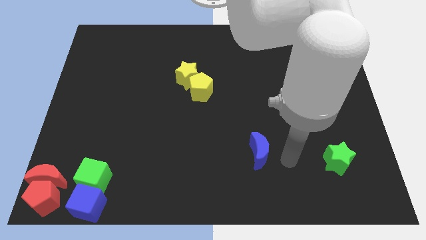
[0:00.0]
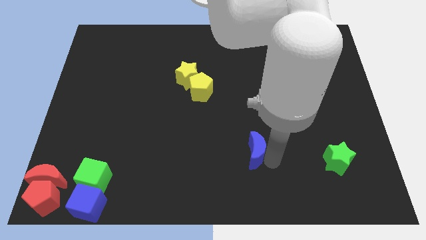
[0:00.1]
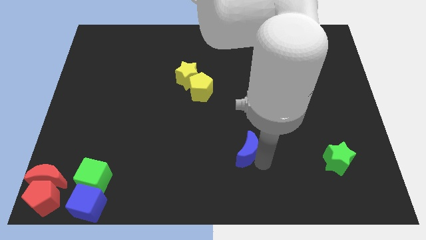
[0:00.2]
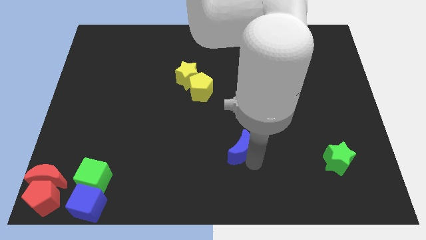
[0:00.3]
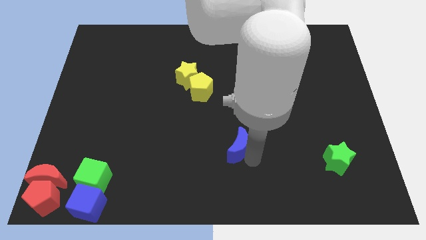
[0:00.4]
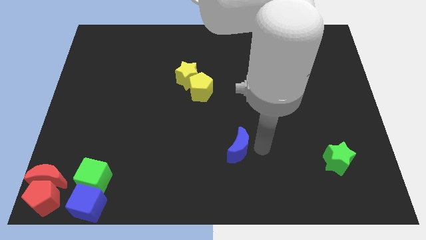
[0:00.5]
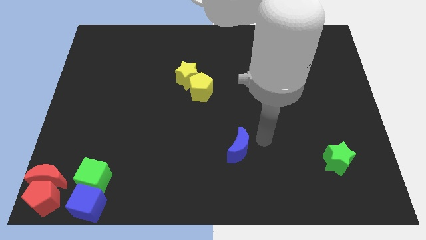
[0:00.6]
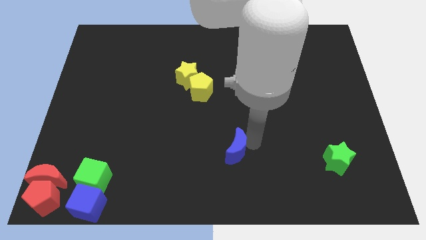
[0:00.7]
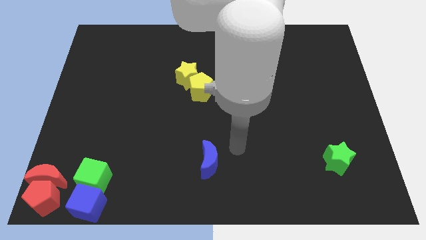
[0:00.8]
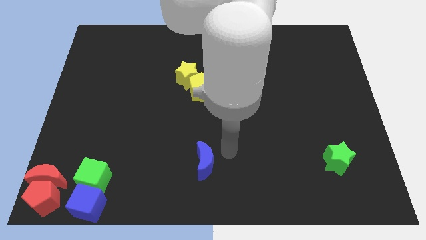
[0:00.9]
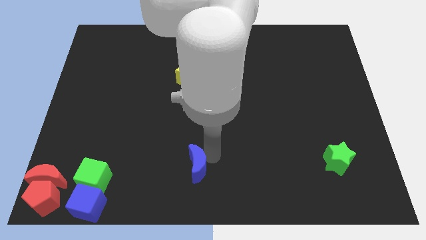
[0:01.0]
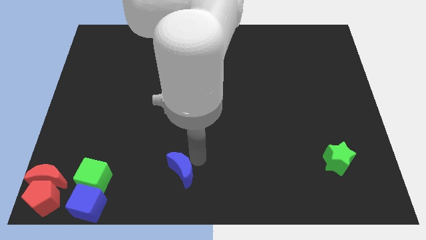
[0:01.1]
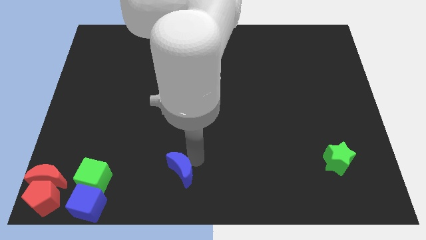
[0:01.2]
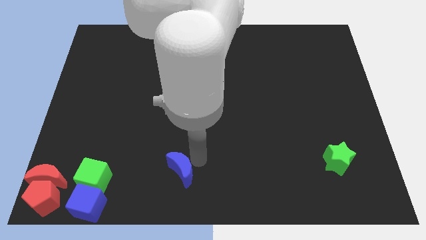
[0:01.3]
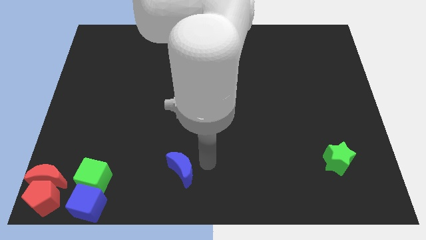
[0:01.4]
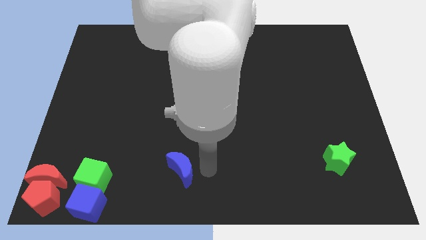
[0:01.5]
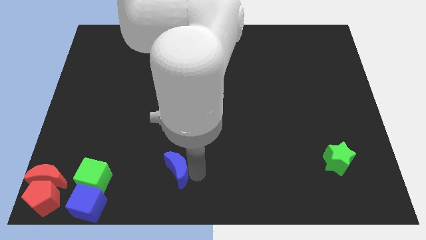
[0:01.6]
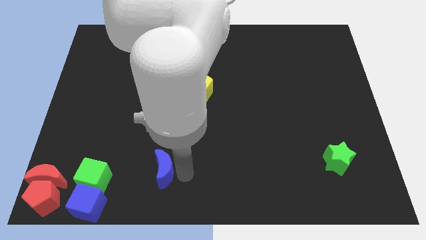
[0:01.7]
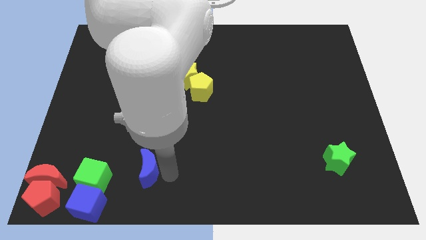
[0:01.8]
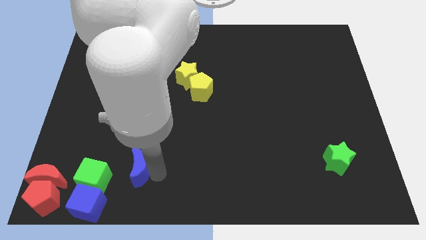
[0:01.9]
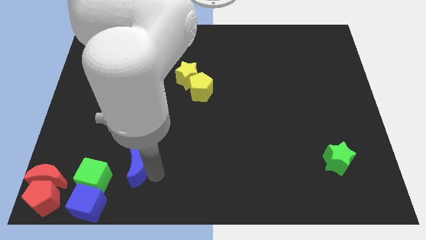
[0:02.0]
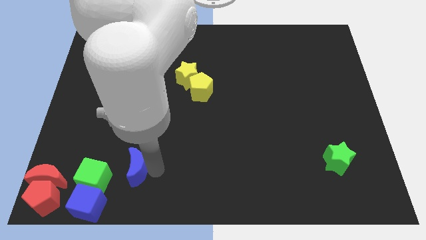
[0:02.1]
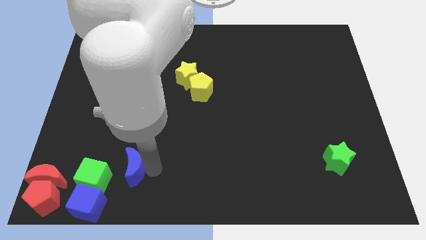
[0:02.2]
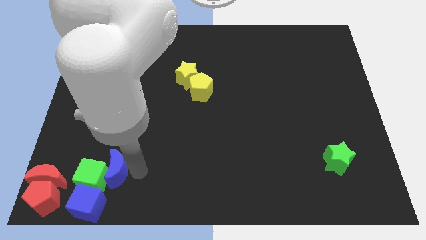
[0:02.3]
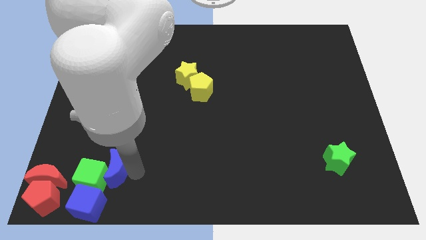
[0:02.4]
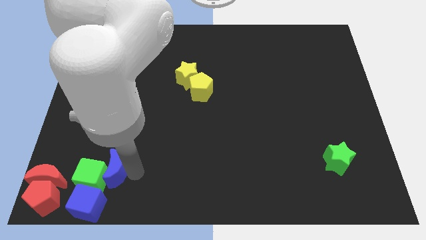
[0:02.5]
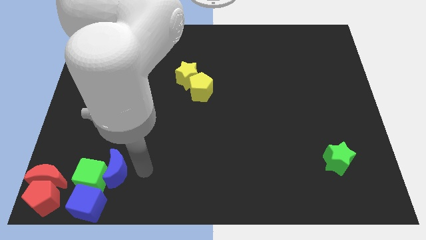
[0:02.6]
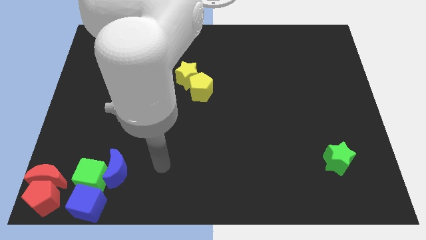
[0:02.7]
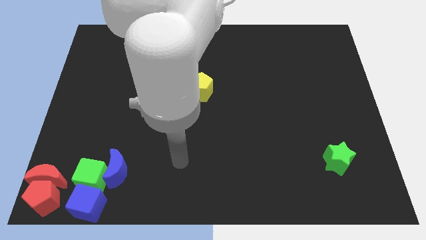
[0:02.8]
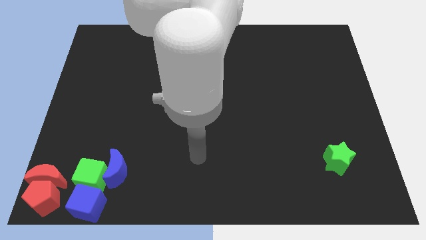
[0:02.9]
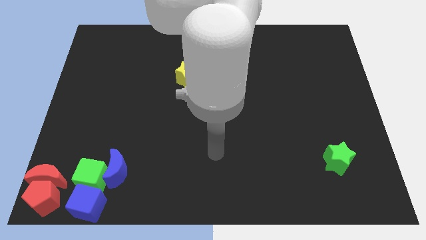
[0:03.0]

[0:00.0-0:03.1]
move the blue moon to the left side of the board

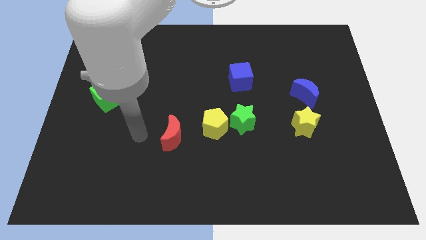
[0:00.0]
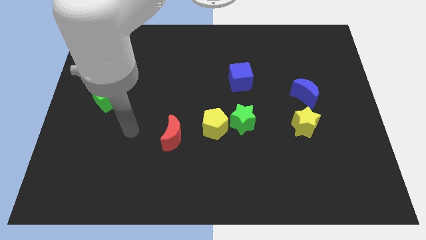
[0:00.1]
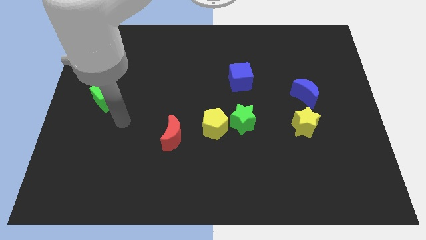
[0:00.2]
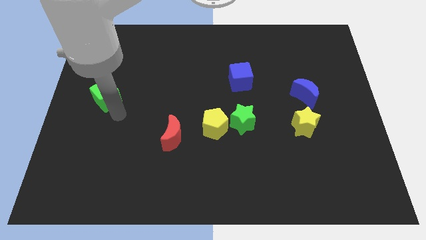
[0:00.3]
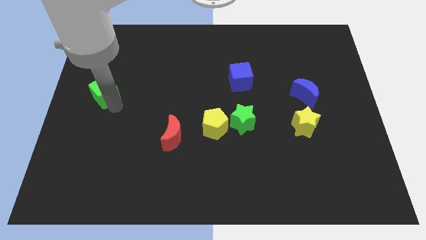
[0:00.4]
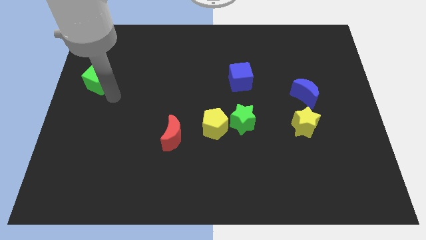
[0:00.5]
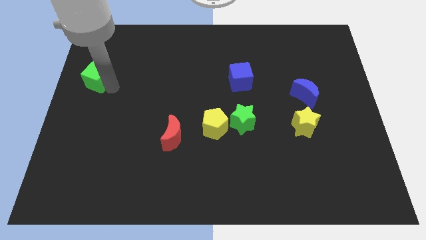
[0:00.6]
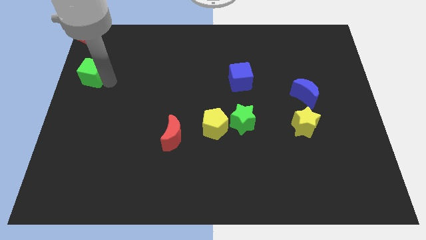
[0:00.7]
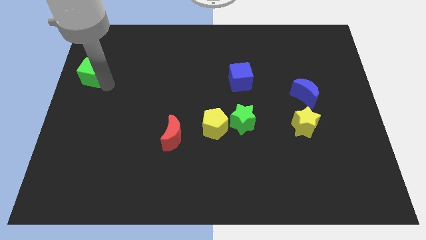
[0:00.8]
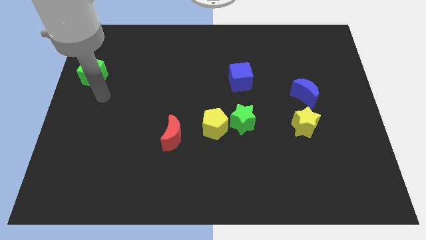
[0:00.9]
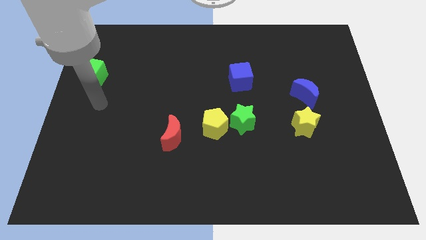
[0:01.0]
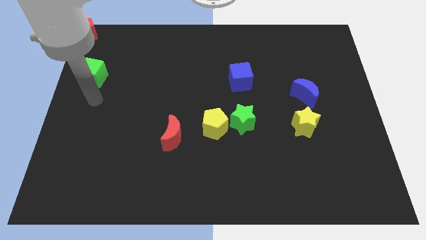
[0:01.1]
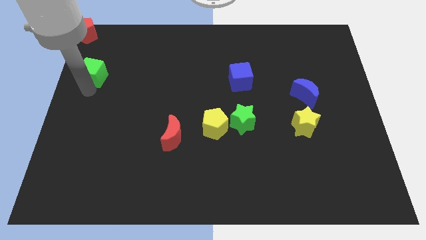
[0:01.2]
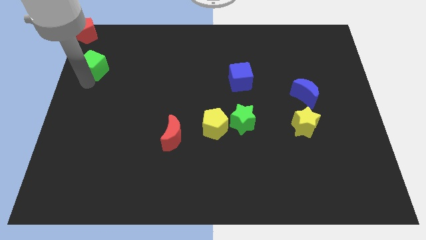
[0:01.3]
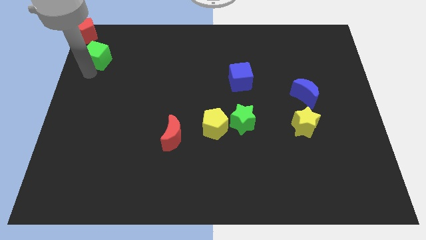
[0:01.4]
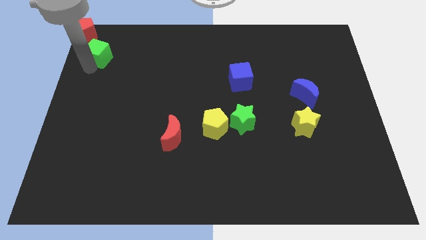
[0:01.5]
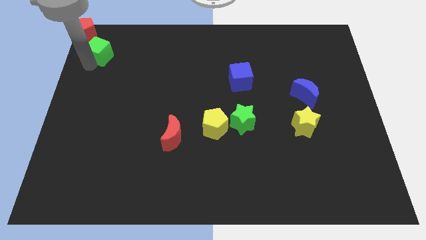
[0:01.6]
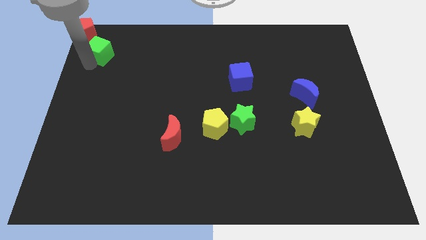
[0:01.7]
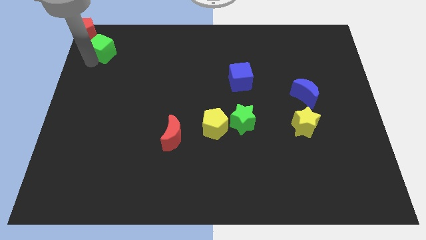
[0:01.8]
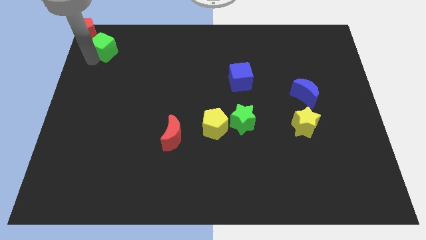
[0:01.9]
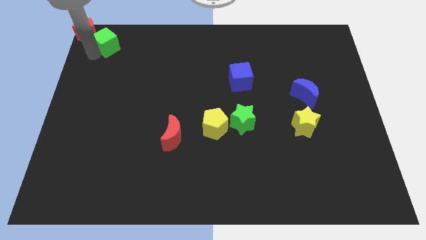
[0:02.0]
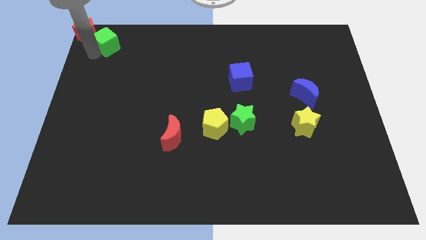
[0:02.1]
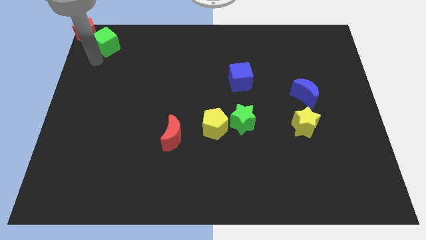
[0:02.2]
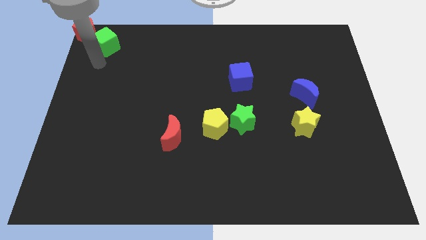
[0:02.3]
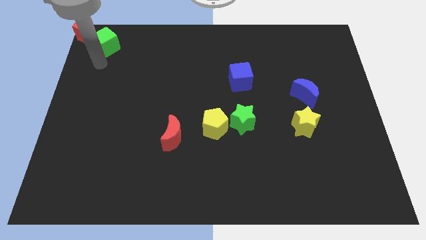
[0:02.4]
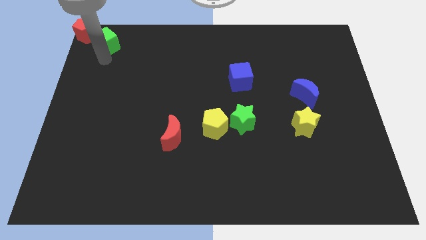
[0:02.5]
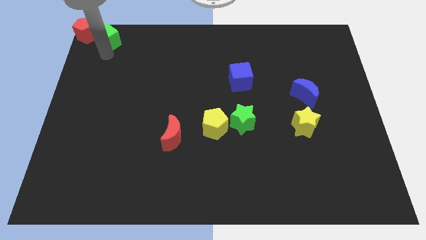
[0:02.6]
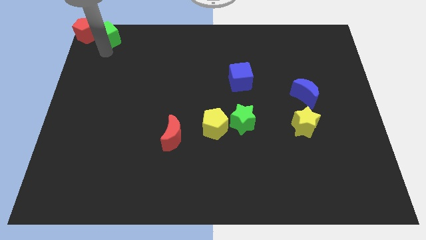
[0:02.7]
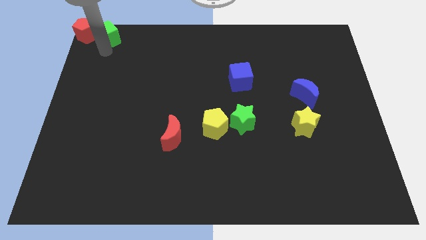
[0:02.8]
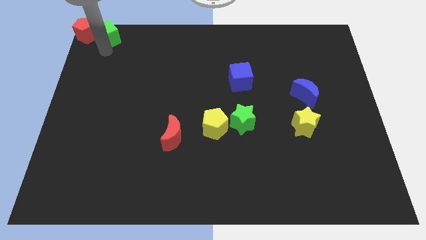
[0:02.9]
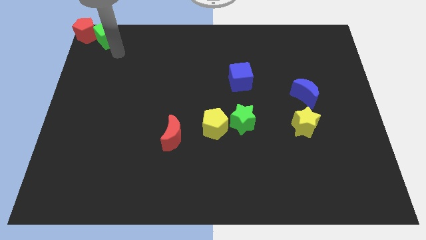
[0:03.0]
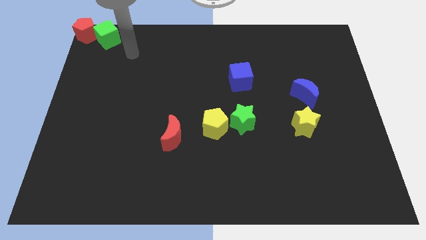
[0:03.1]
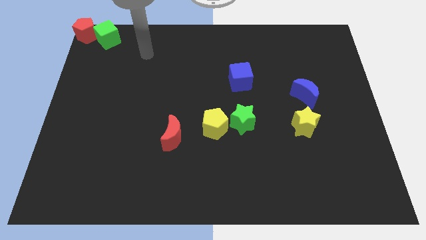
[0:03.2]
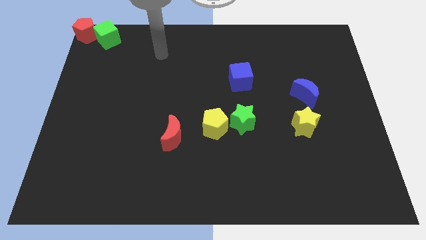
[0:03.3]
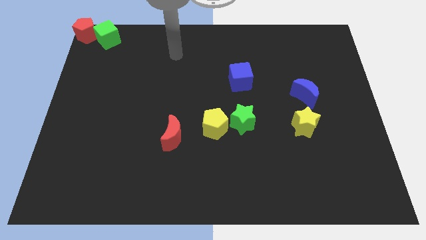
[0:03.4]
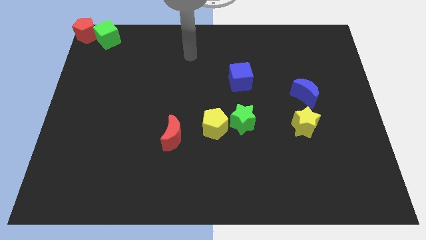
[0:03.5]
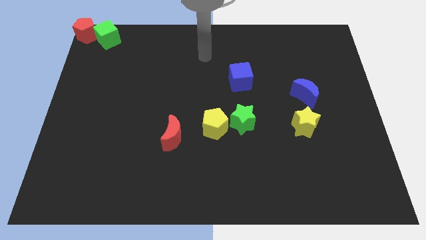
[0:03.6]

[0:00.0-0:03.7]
push the green cube towards the red pentagon

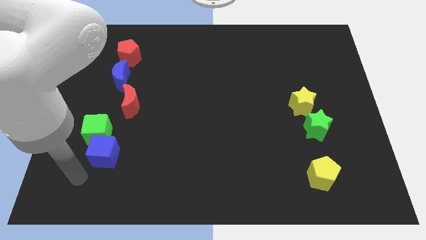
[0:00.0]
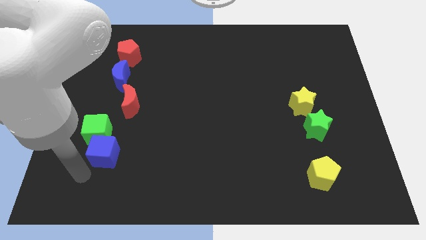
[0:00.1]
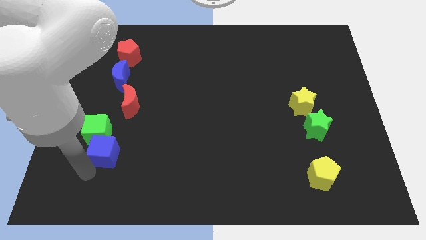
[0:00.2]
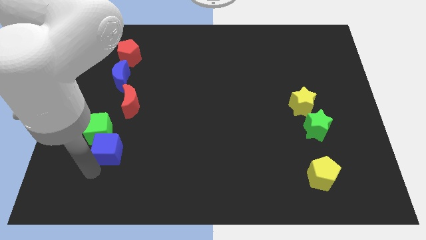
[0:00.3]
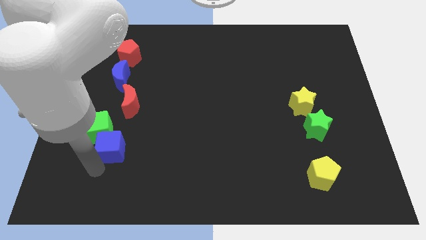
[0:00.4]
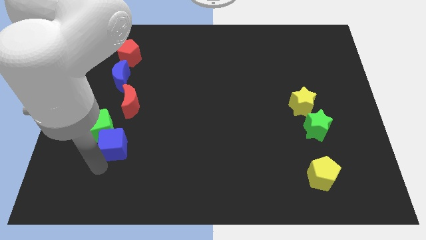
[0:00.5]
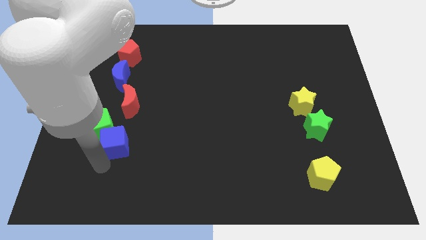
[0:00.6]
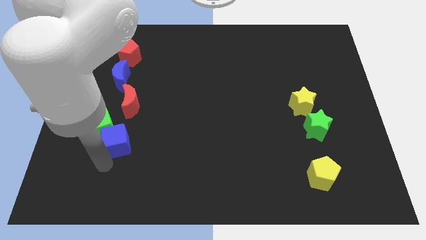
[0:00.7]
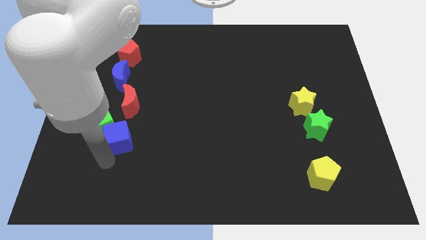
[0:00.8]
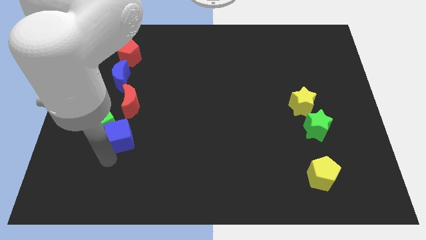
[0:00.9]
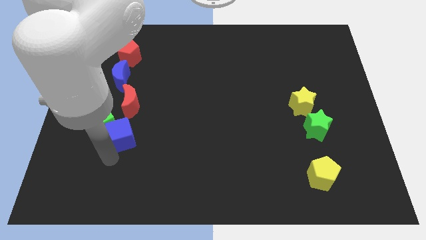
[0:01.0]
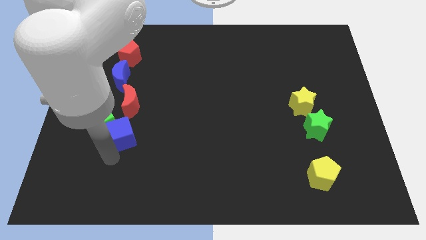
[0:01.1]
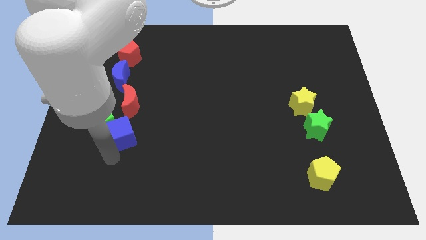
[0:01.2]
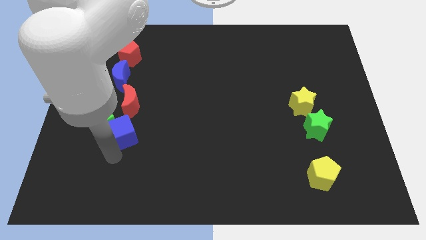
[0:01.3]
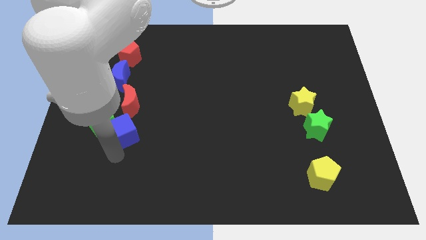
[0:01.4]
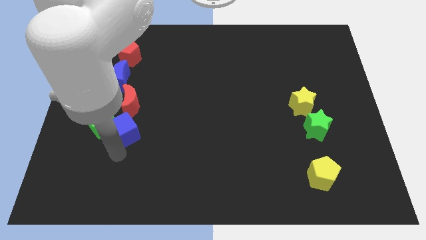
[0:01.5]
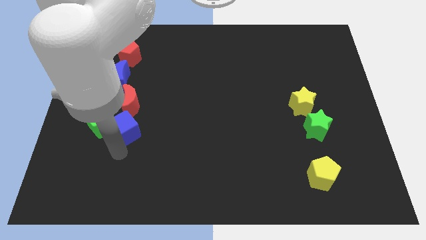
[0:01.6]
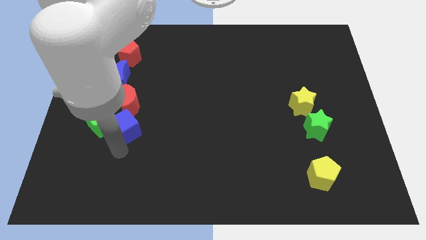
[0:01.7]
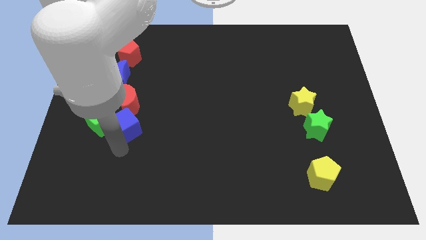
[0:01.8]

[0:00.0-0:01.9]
place blue cube to the btoom of the red moon

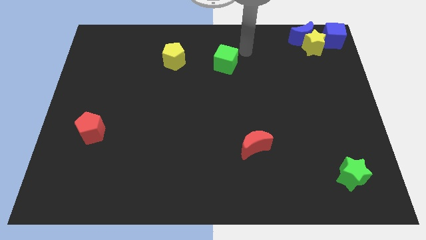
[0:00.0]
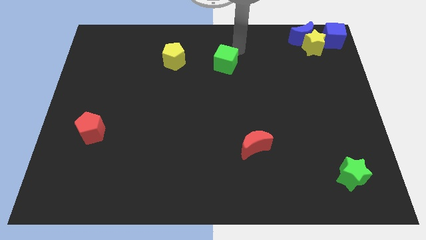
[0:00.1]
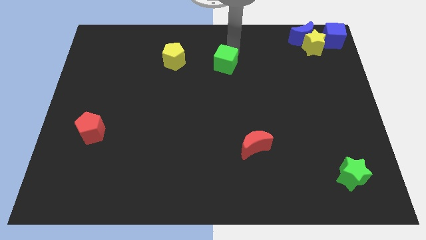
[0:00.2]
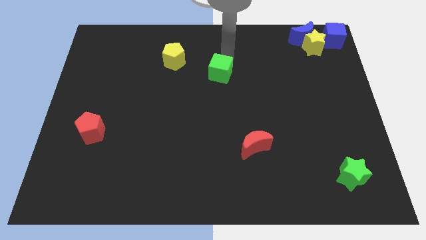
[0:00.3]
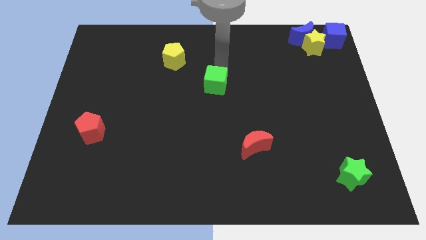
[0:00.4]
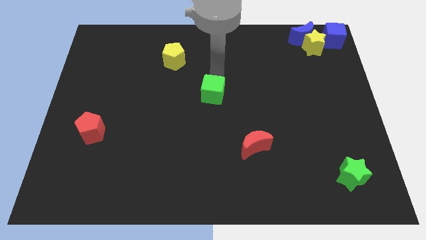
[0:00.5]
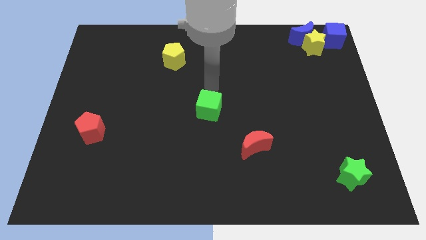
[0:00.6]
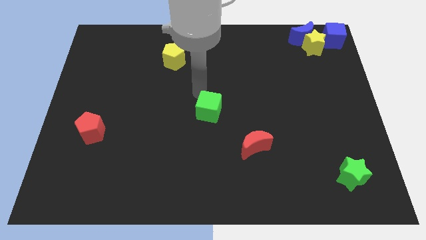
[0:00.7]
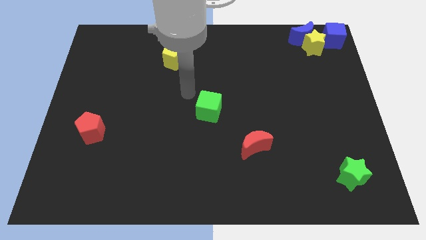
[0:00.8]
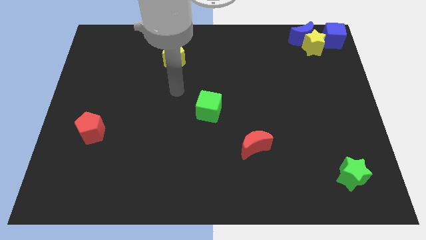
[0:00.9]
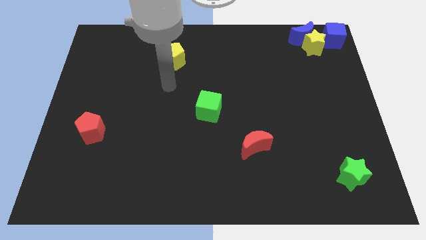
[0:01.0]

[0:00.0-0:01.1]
slightly push the green cube towards the center of the board
